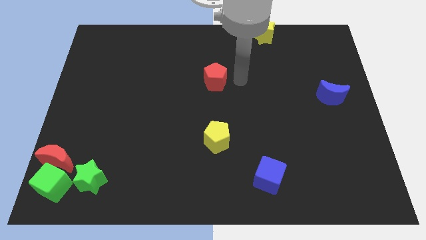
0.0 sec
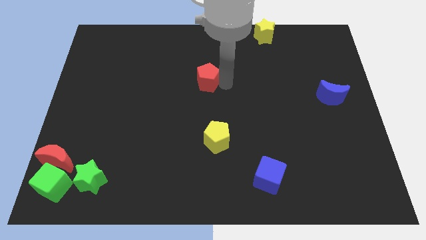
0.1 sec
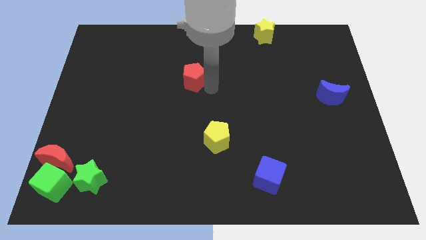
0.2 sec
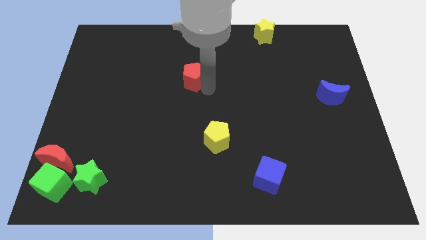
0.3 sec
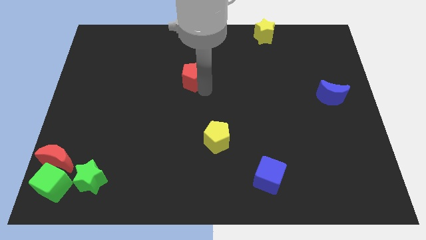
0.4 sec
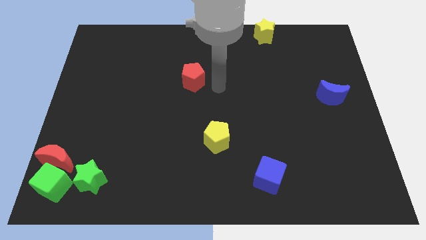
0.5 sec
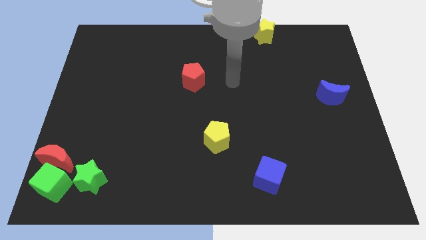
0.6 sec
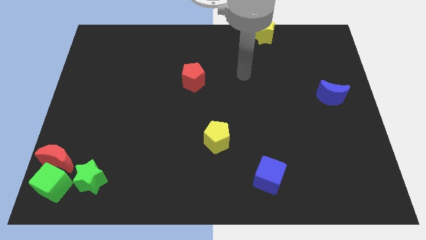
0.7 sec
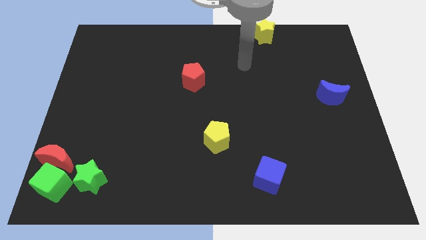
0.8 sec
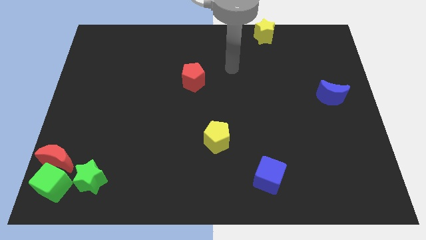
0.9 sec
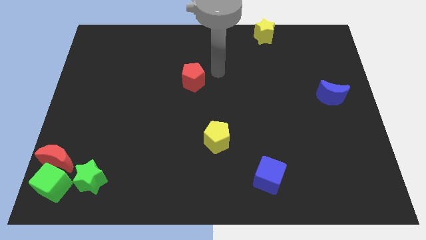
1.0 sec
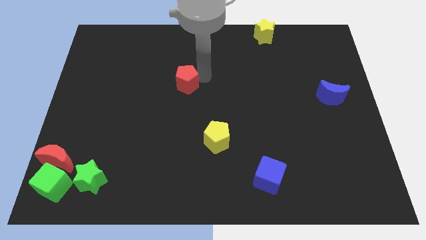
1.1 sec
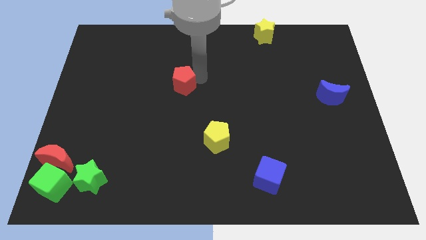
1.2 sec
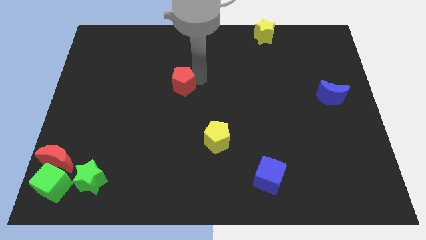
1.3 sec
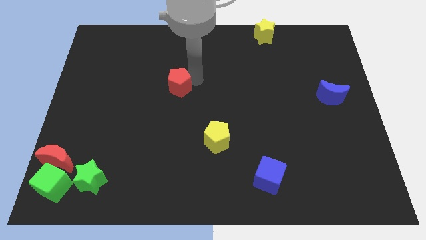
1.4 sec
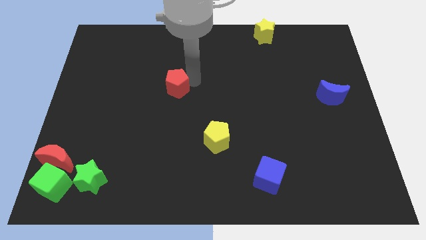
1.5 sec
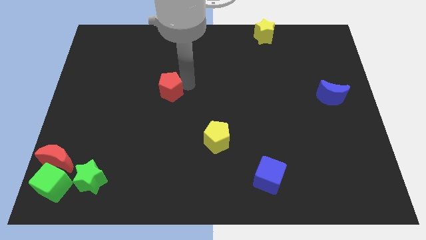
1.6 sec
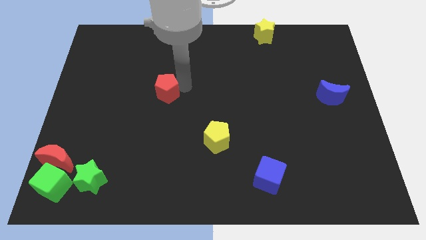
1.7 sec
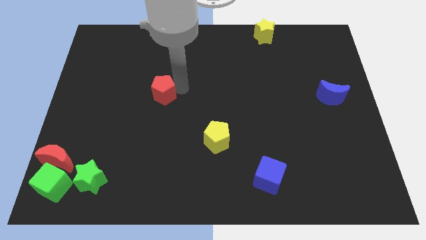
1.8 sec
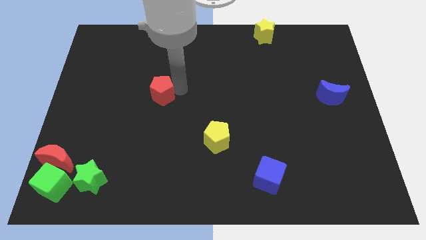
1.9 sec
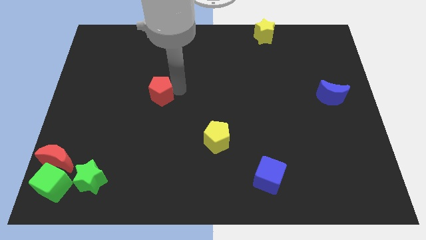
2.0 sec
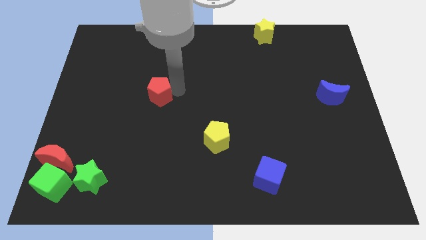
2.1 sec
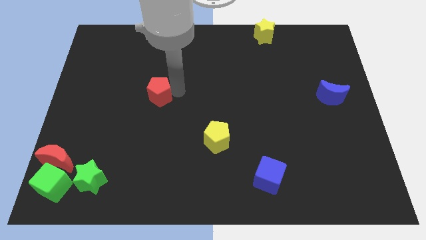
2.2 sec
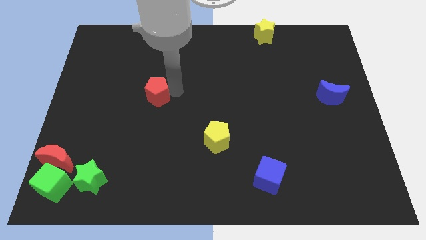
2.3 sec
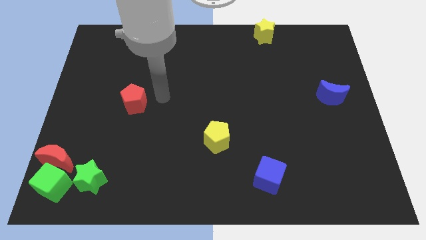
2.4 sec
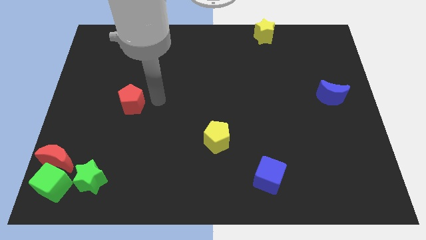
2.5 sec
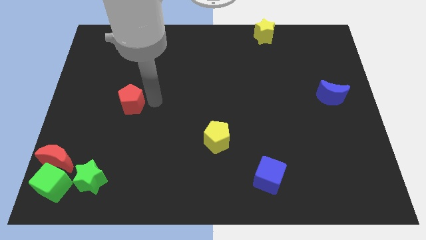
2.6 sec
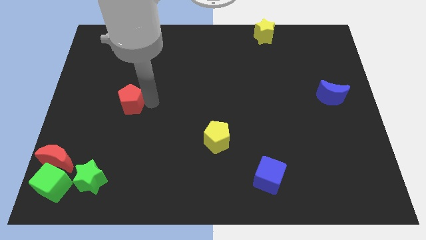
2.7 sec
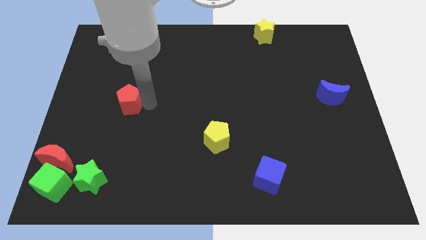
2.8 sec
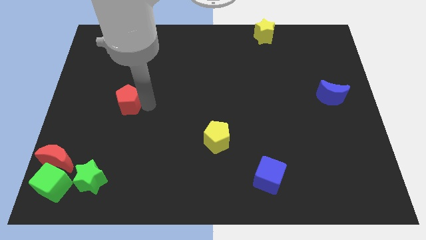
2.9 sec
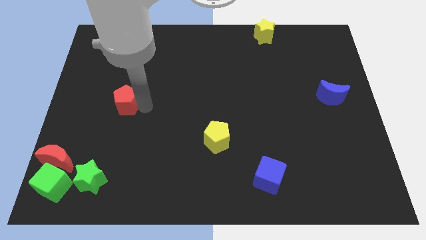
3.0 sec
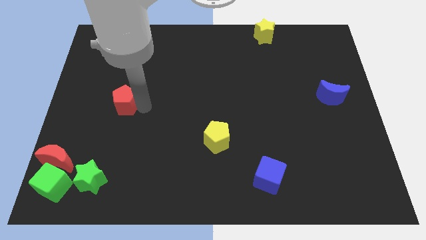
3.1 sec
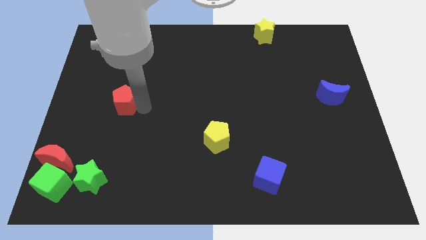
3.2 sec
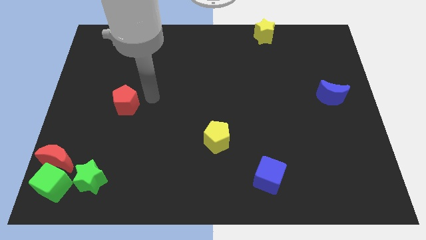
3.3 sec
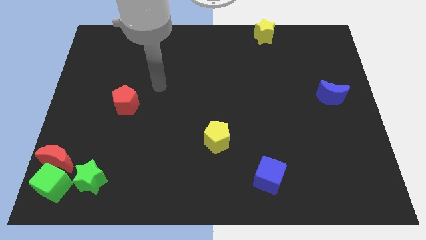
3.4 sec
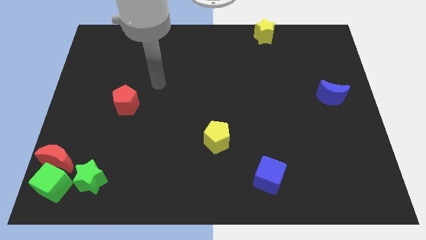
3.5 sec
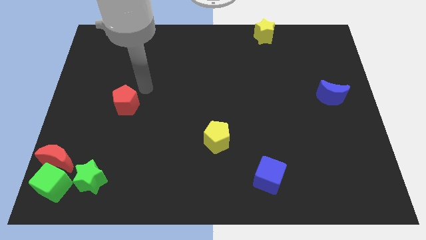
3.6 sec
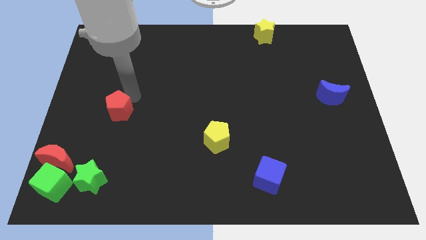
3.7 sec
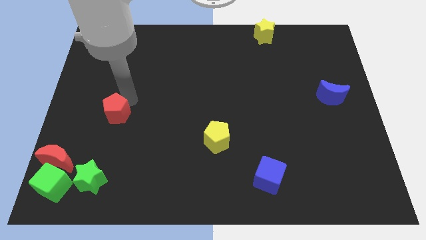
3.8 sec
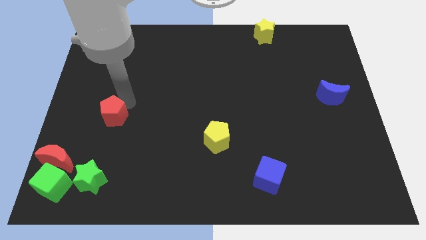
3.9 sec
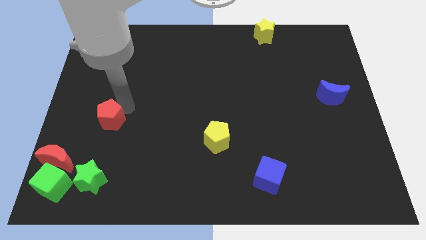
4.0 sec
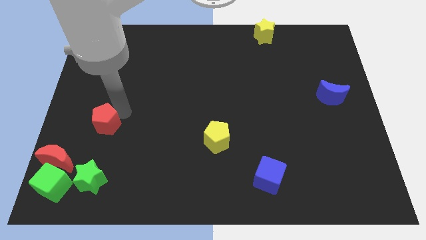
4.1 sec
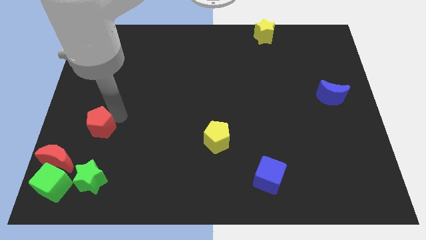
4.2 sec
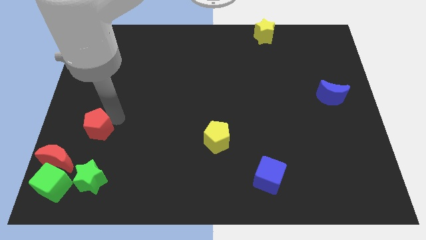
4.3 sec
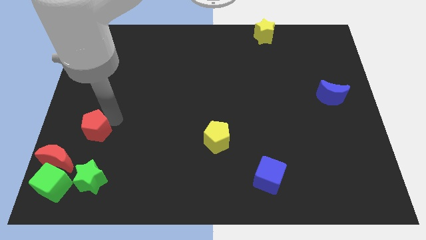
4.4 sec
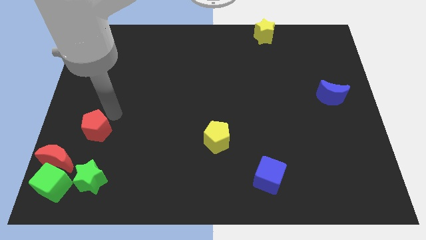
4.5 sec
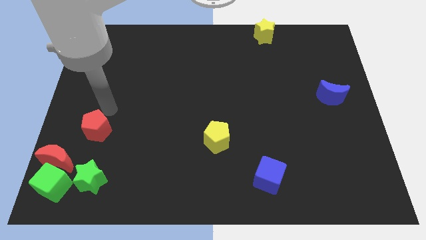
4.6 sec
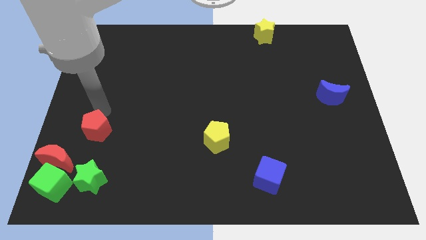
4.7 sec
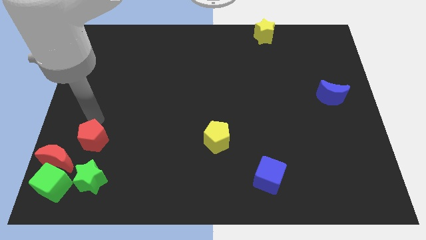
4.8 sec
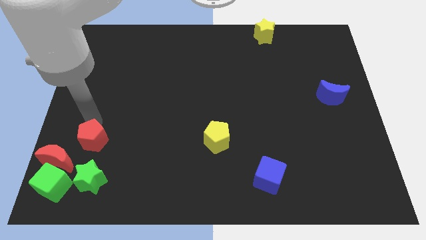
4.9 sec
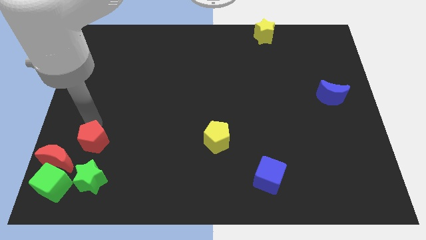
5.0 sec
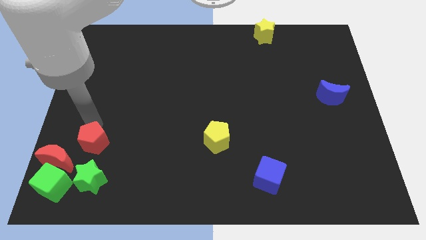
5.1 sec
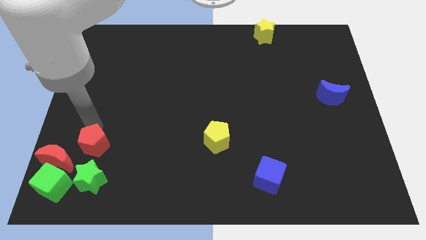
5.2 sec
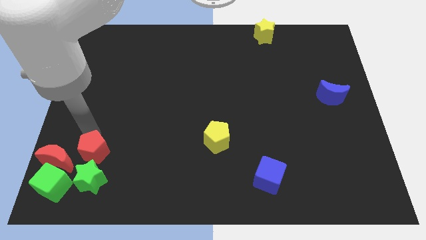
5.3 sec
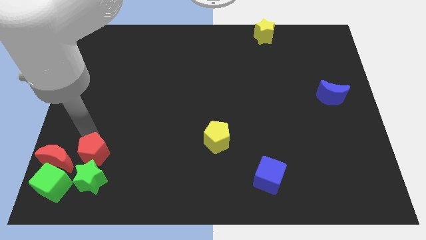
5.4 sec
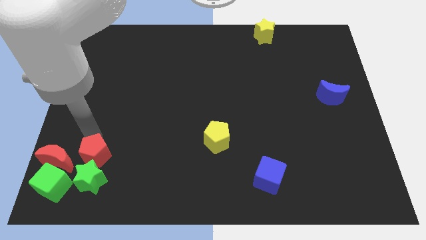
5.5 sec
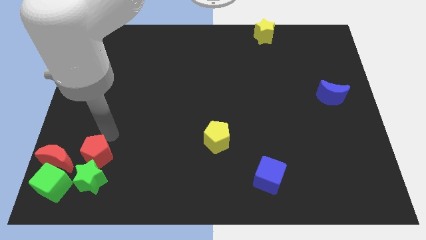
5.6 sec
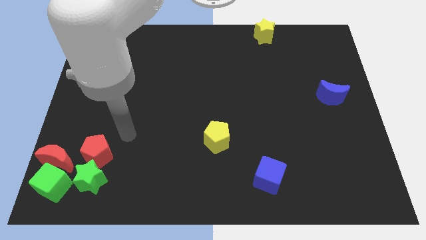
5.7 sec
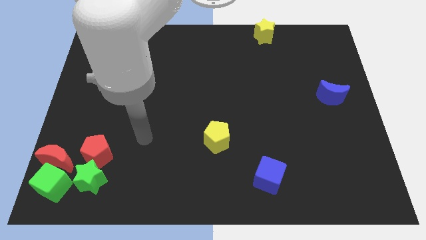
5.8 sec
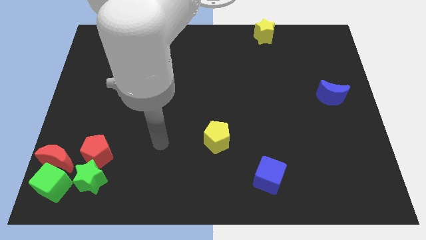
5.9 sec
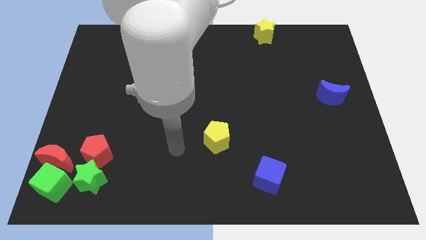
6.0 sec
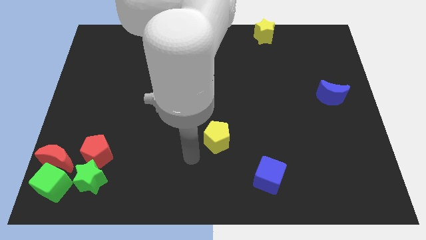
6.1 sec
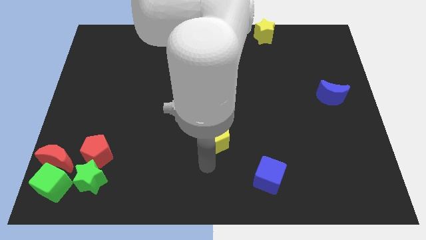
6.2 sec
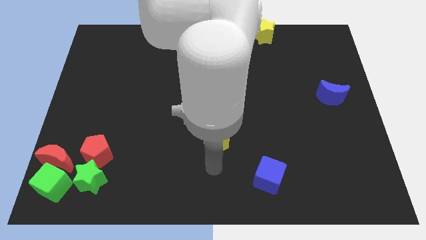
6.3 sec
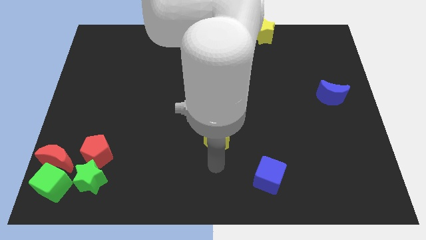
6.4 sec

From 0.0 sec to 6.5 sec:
push the red pentagon into the green star

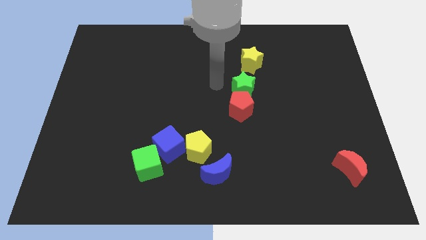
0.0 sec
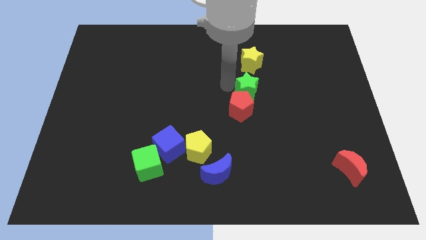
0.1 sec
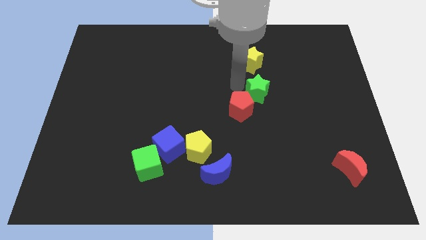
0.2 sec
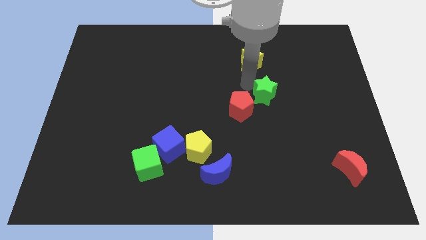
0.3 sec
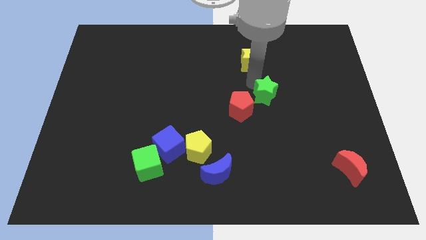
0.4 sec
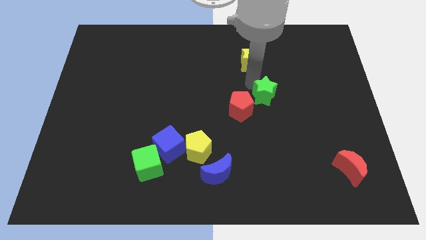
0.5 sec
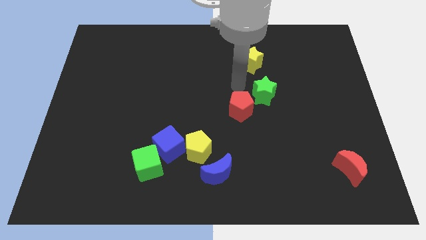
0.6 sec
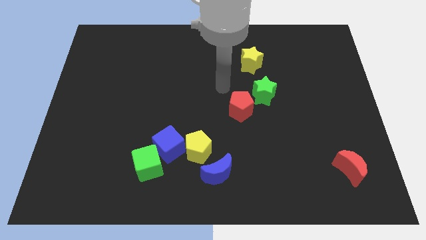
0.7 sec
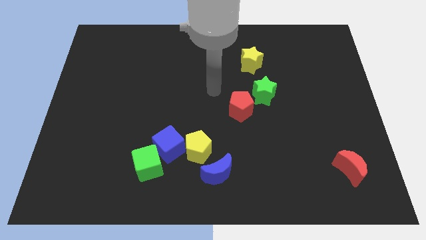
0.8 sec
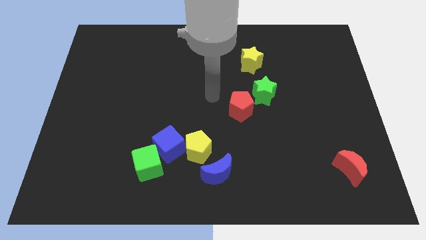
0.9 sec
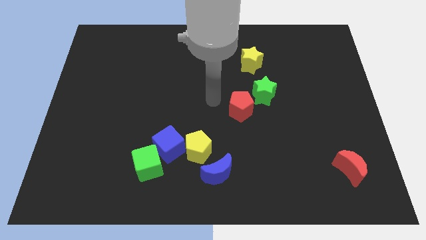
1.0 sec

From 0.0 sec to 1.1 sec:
move green star slightly right

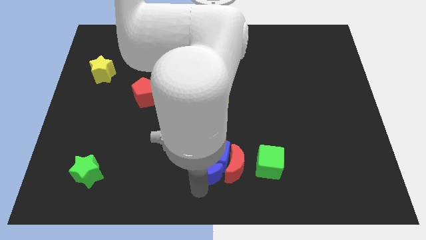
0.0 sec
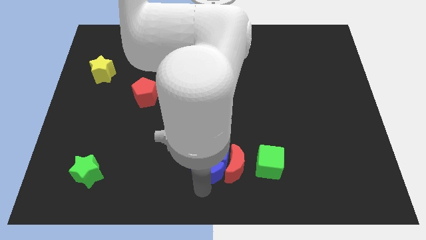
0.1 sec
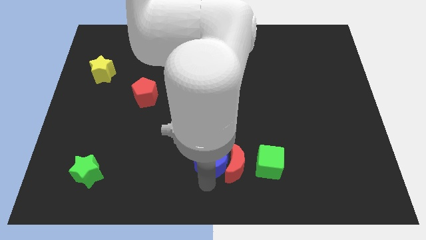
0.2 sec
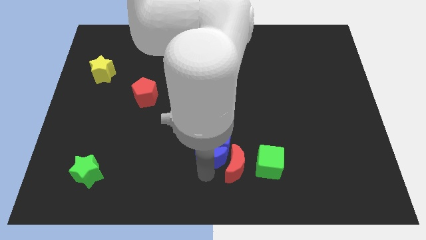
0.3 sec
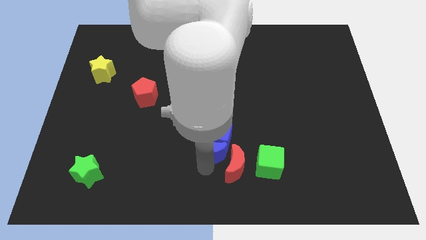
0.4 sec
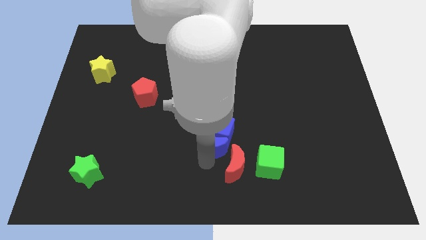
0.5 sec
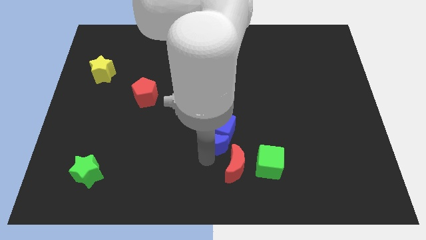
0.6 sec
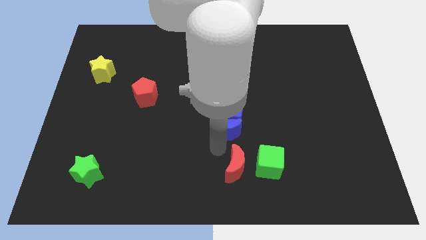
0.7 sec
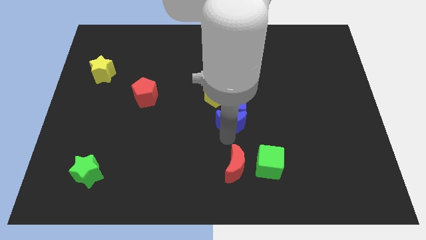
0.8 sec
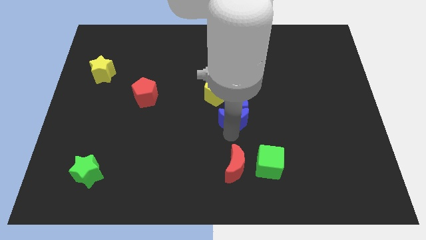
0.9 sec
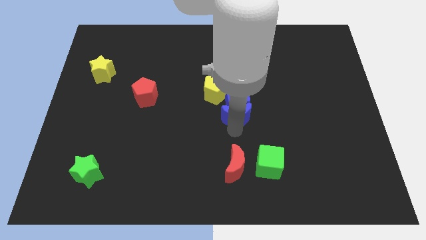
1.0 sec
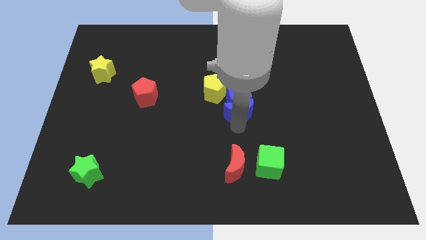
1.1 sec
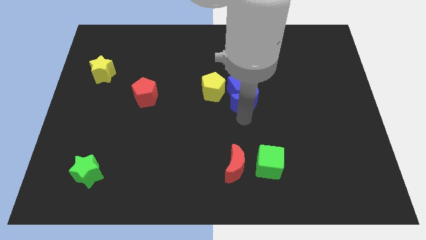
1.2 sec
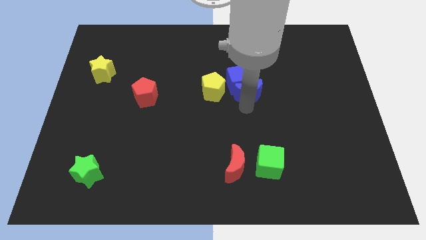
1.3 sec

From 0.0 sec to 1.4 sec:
move the blue blocks right to the yellow pentagon
